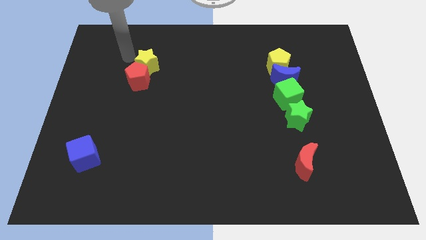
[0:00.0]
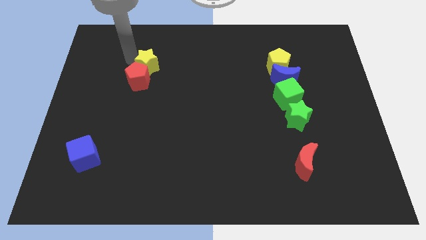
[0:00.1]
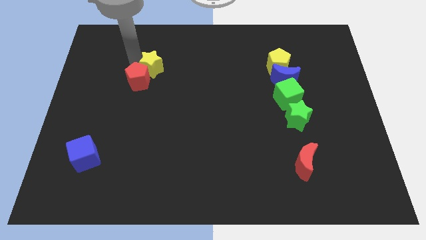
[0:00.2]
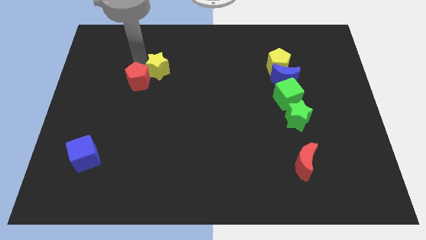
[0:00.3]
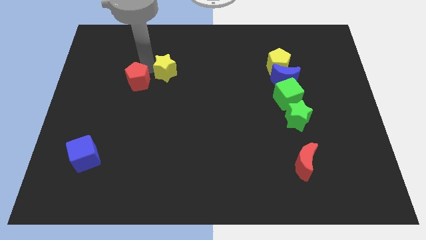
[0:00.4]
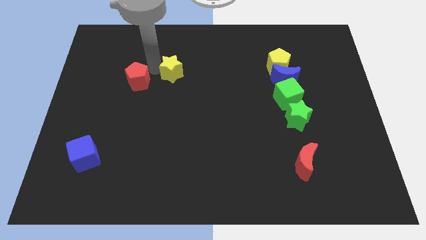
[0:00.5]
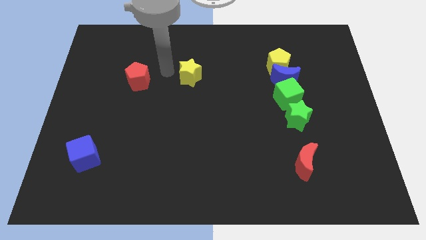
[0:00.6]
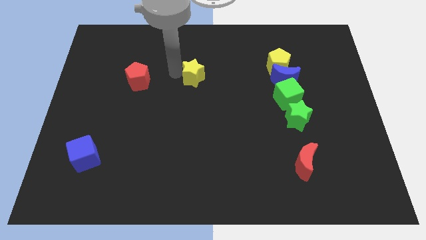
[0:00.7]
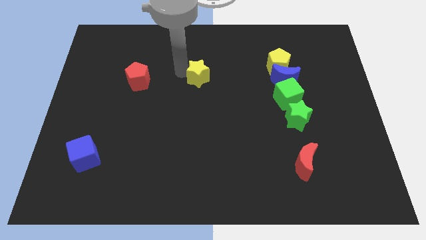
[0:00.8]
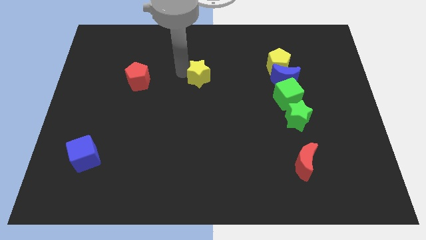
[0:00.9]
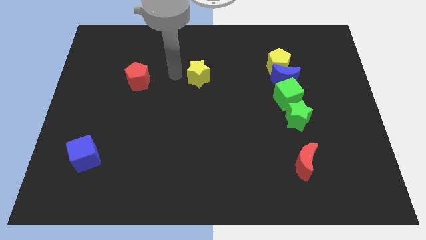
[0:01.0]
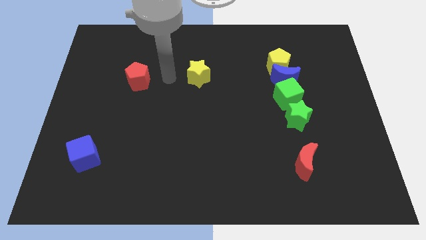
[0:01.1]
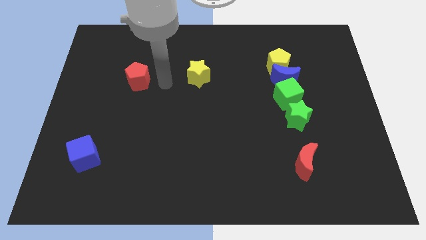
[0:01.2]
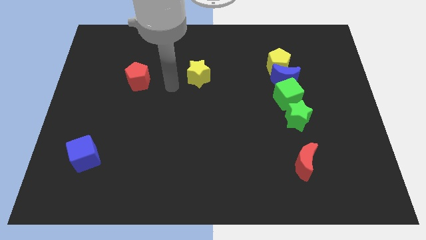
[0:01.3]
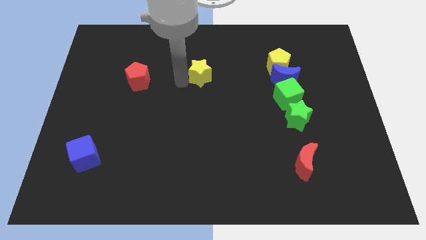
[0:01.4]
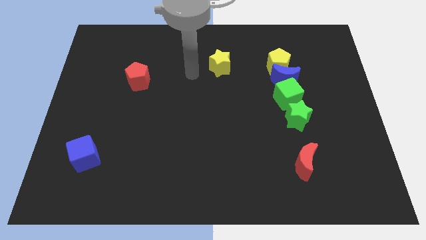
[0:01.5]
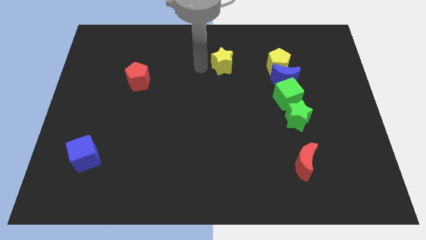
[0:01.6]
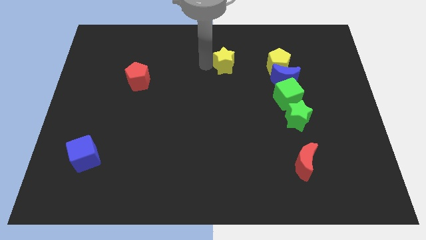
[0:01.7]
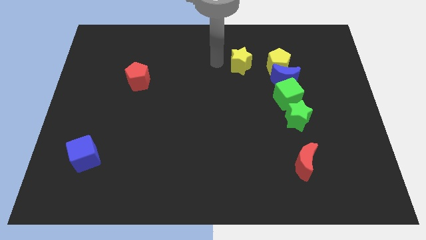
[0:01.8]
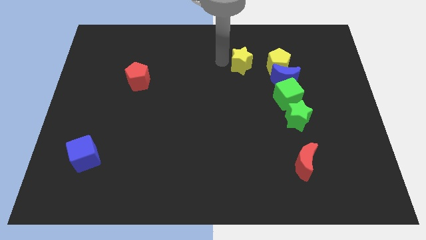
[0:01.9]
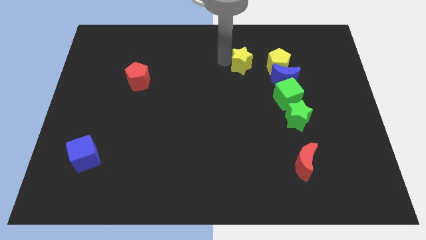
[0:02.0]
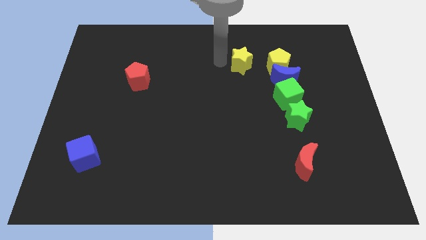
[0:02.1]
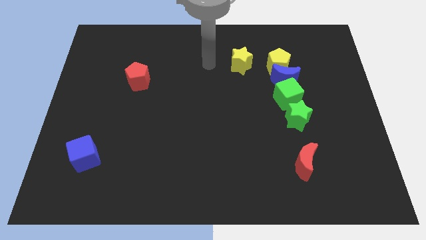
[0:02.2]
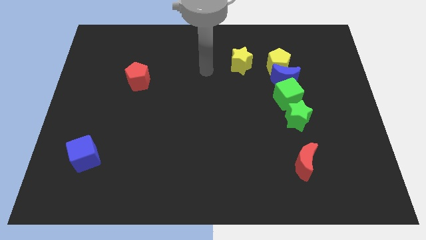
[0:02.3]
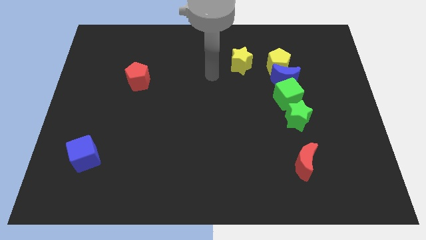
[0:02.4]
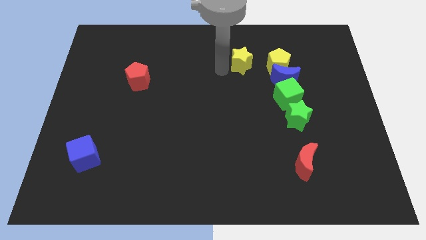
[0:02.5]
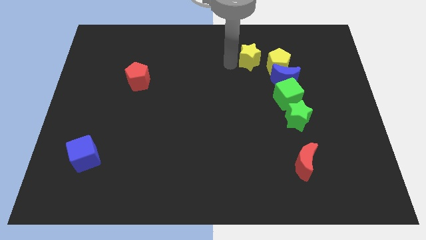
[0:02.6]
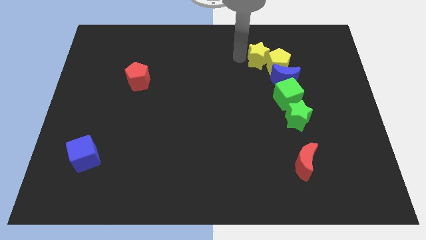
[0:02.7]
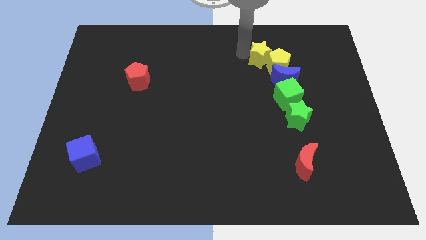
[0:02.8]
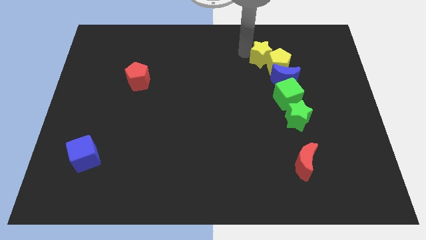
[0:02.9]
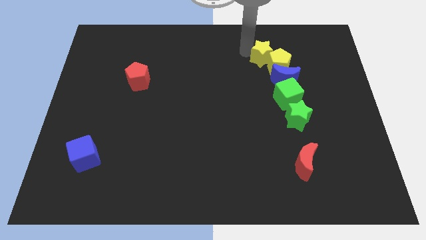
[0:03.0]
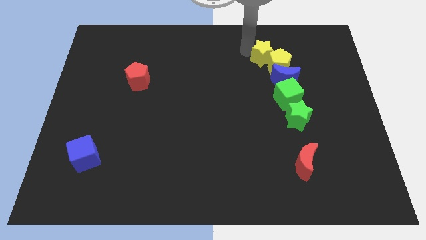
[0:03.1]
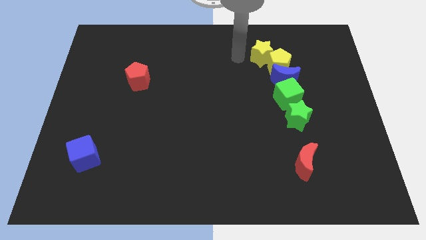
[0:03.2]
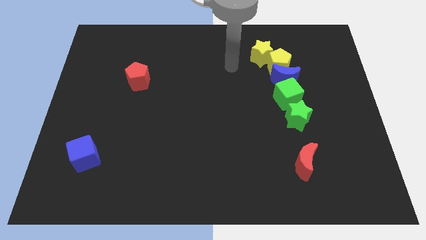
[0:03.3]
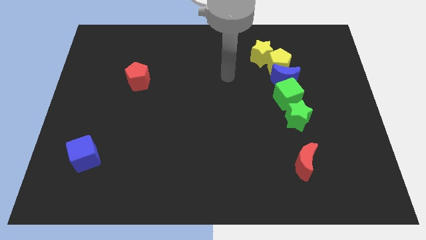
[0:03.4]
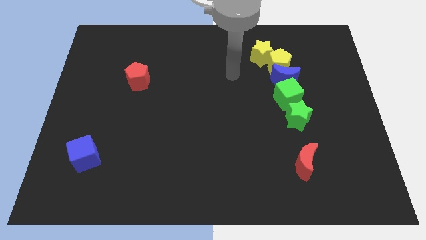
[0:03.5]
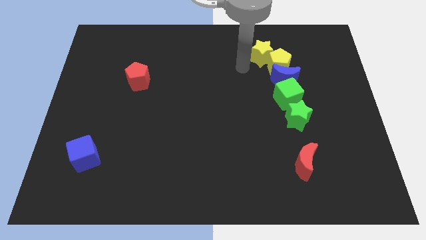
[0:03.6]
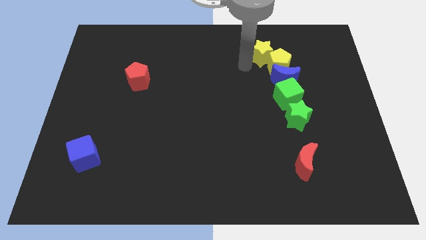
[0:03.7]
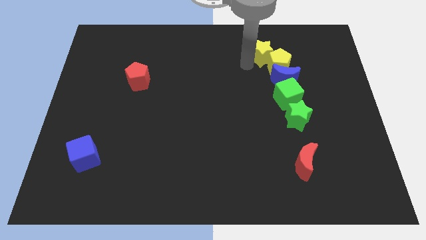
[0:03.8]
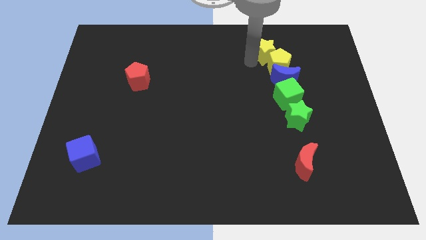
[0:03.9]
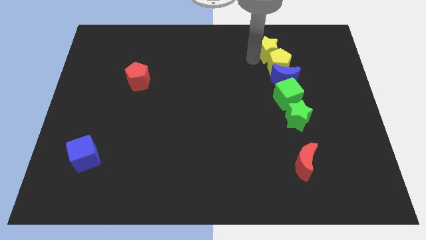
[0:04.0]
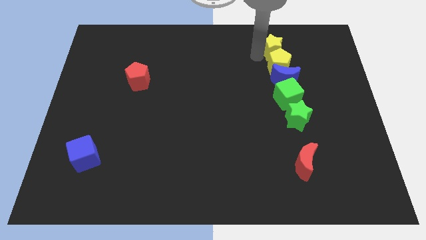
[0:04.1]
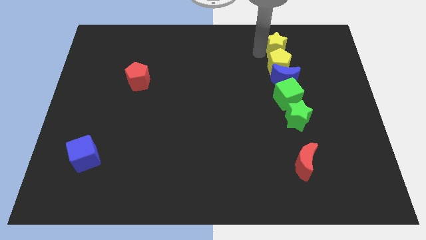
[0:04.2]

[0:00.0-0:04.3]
place the yellow star above the yellow pentagon

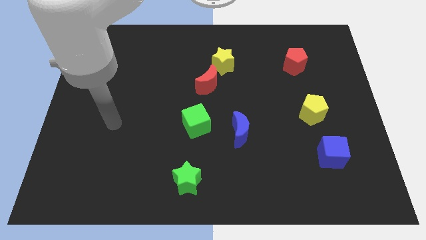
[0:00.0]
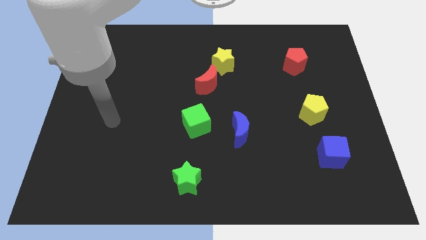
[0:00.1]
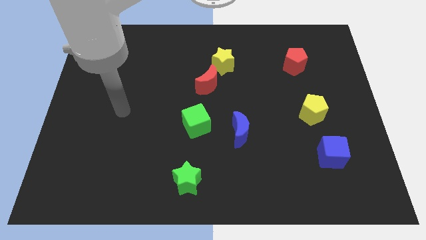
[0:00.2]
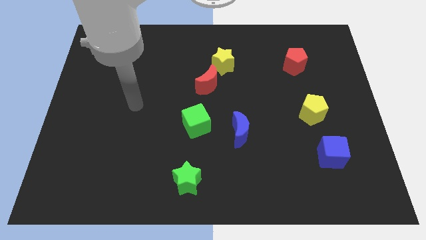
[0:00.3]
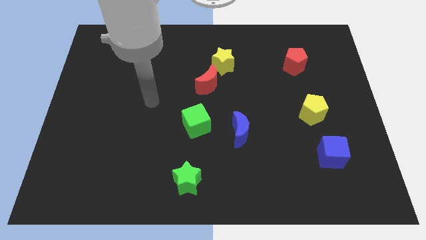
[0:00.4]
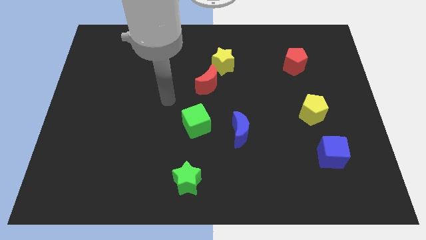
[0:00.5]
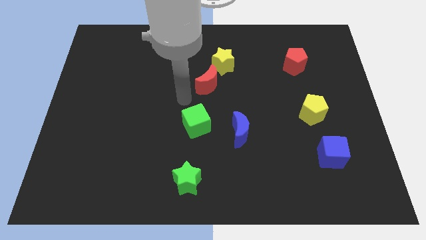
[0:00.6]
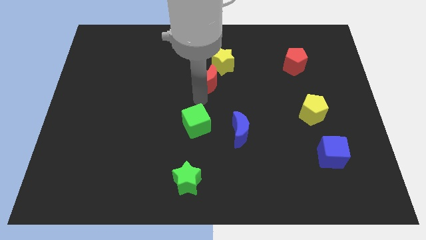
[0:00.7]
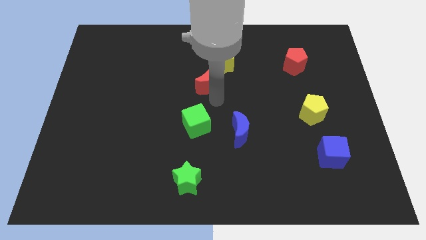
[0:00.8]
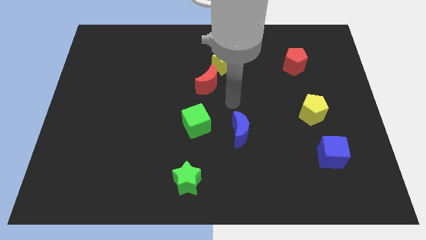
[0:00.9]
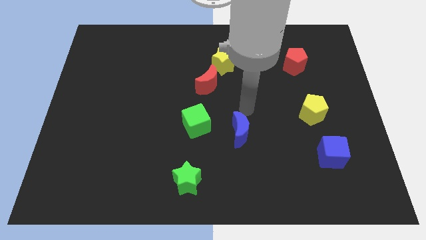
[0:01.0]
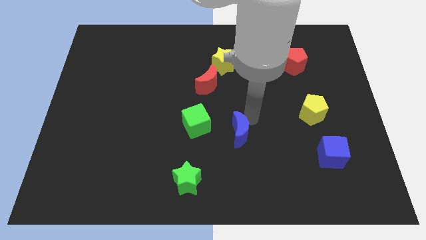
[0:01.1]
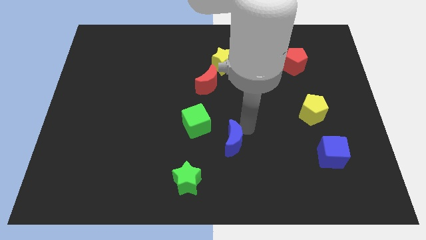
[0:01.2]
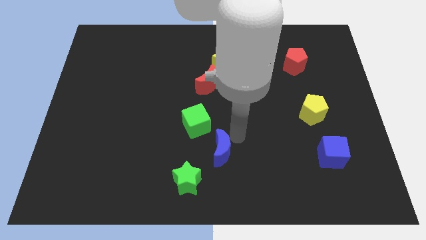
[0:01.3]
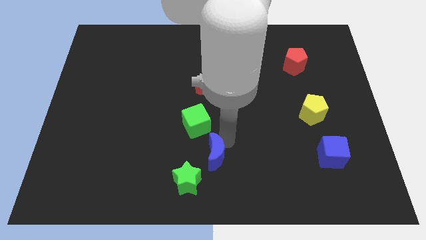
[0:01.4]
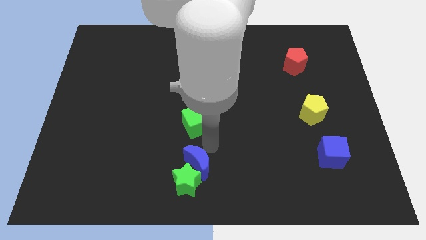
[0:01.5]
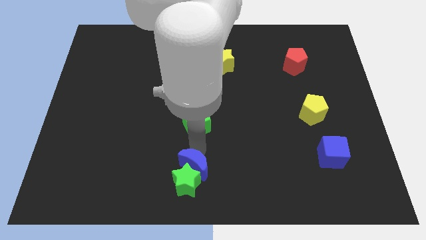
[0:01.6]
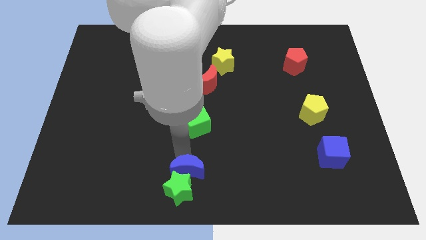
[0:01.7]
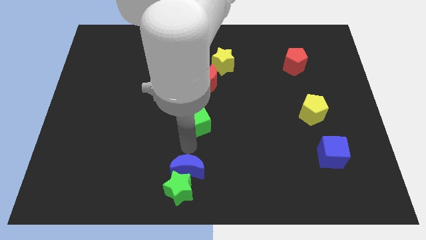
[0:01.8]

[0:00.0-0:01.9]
push the blue crescent into the green star

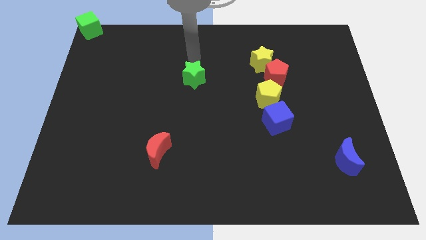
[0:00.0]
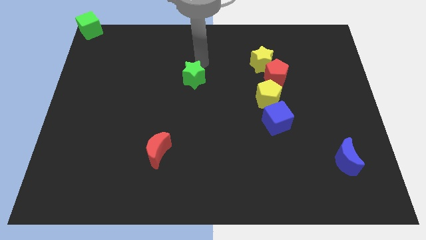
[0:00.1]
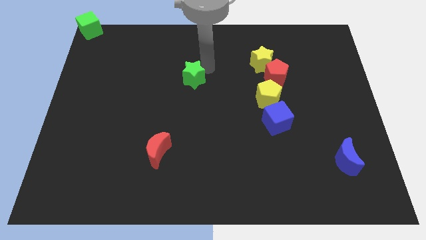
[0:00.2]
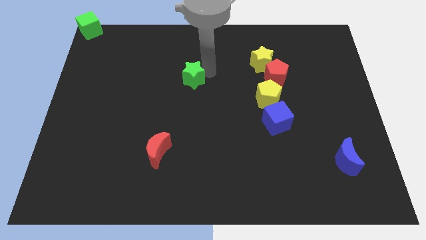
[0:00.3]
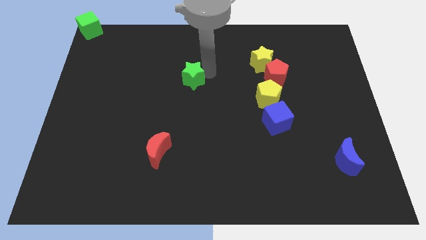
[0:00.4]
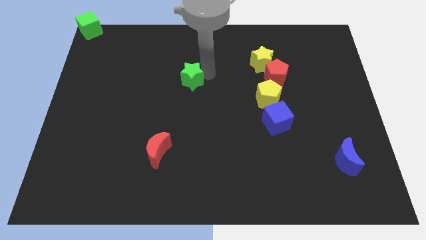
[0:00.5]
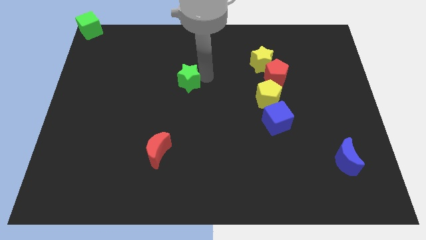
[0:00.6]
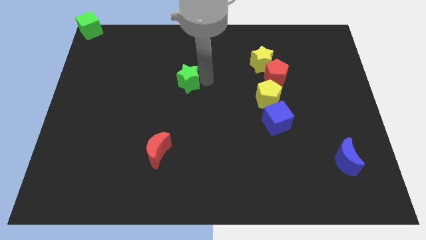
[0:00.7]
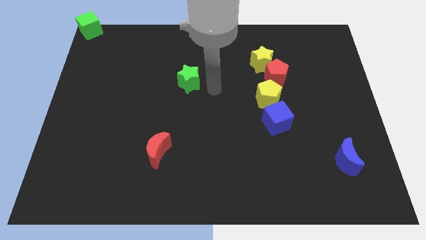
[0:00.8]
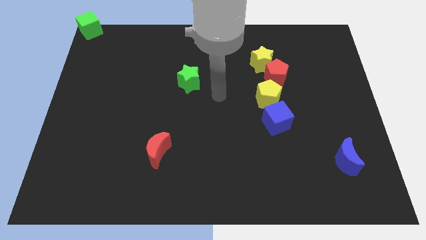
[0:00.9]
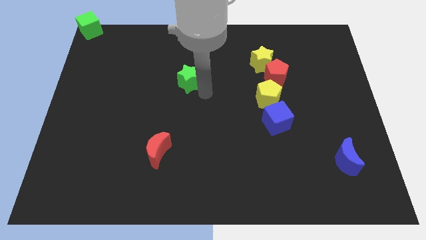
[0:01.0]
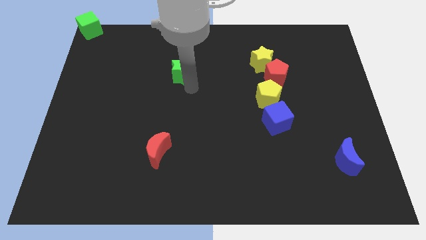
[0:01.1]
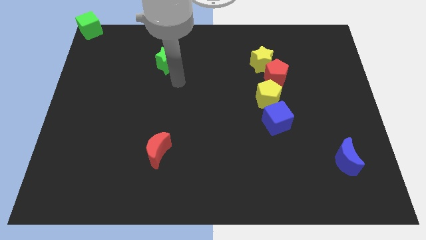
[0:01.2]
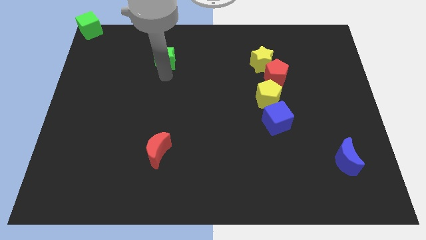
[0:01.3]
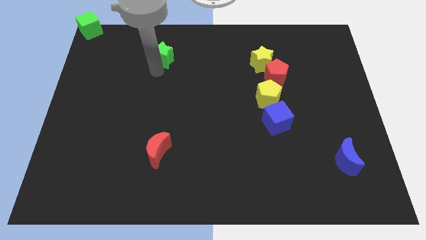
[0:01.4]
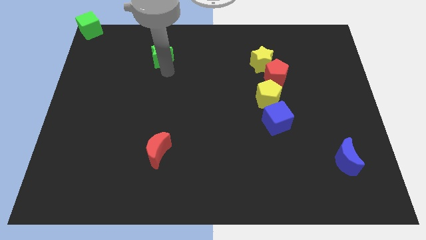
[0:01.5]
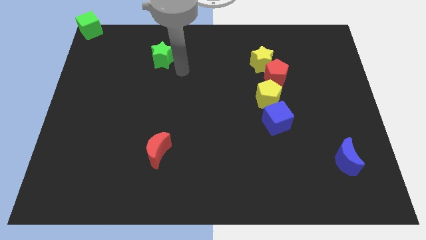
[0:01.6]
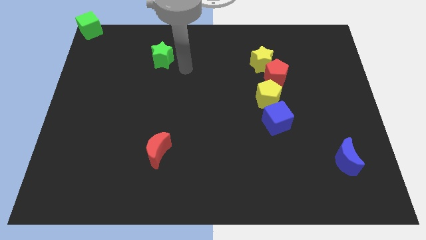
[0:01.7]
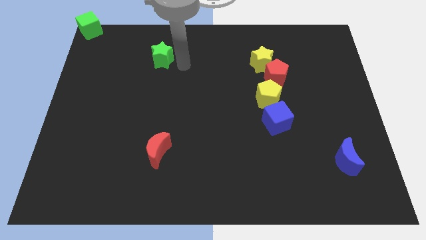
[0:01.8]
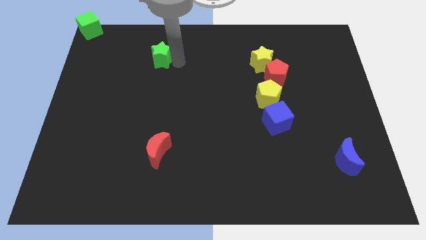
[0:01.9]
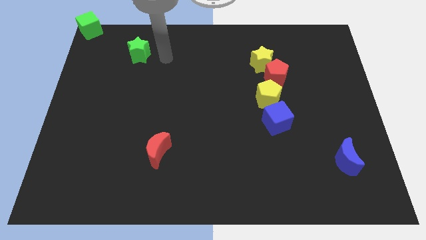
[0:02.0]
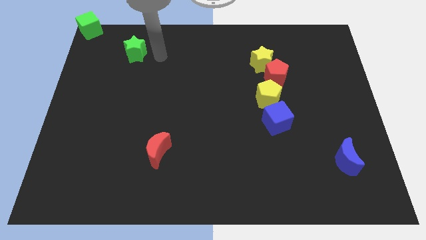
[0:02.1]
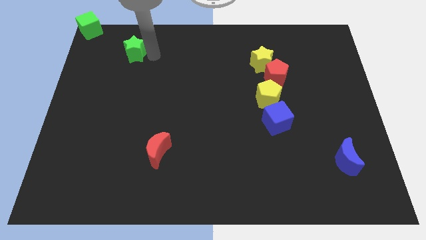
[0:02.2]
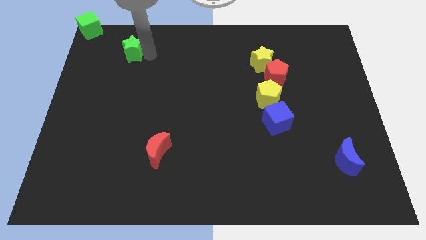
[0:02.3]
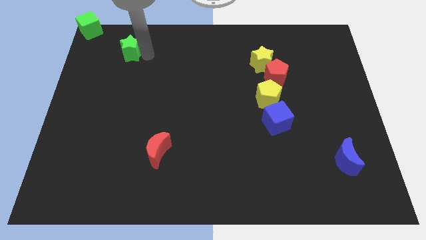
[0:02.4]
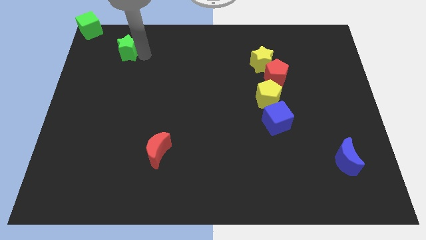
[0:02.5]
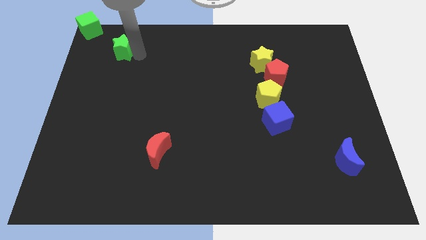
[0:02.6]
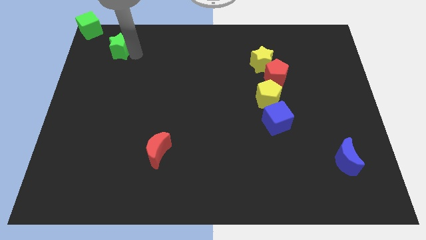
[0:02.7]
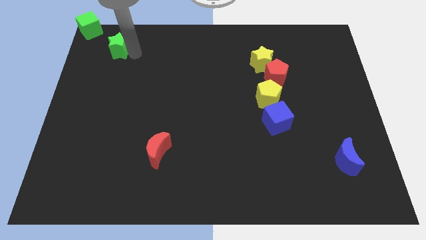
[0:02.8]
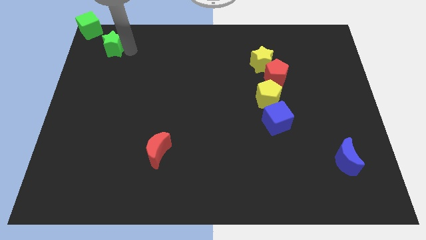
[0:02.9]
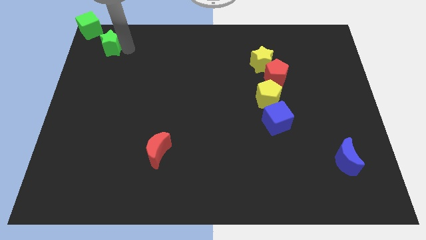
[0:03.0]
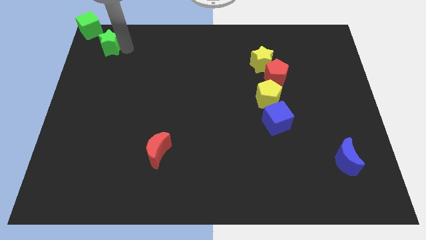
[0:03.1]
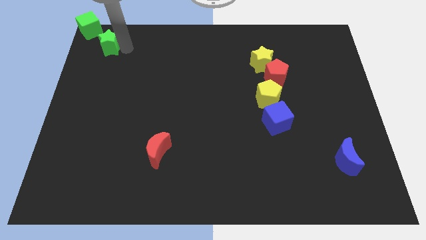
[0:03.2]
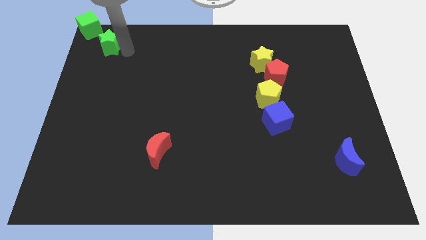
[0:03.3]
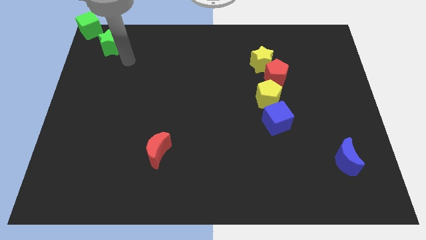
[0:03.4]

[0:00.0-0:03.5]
move the green star diagonally right of the green cube
